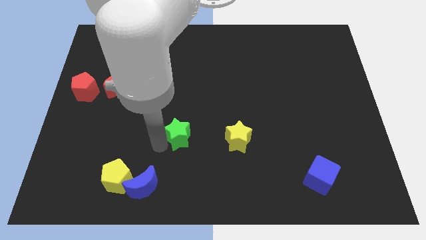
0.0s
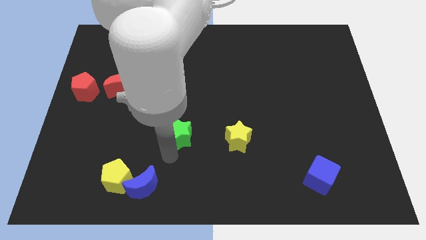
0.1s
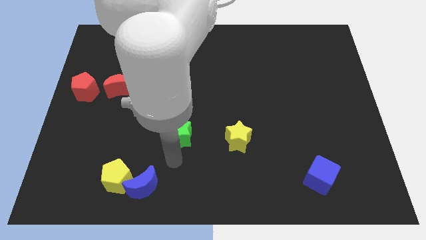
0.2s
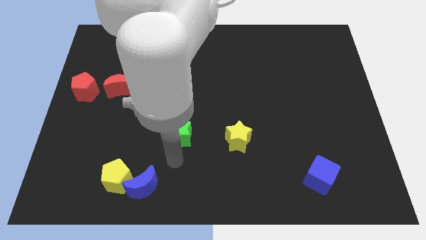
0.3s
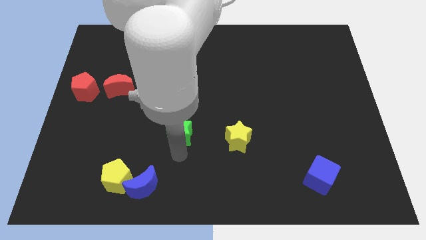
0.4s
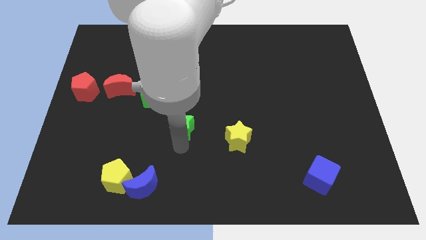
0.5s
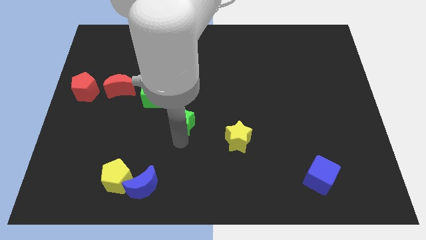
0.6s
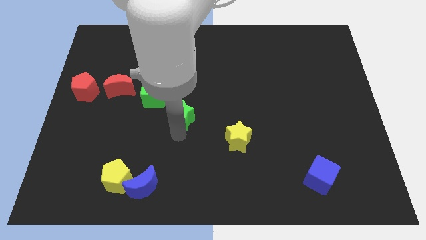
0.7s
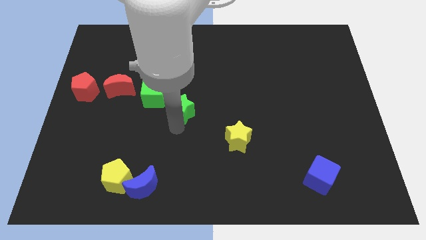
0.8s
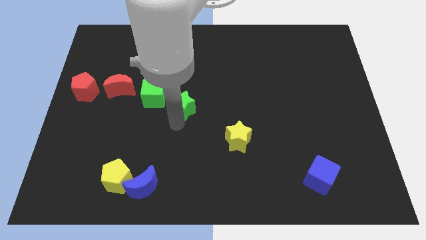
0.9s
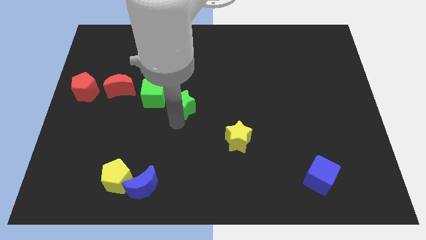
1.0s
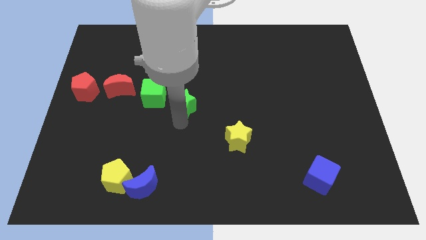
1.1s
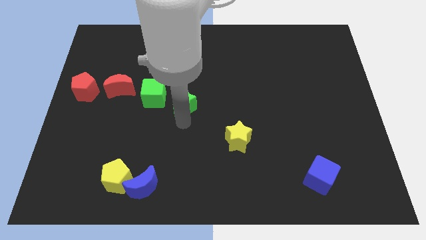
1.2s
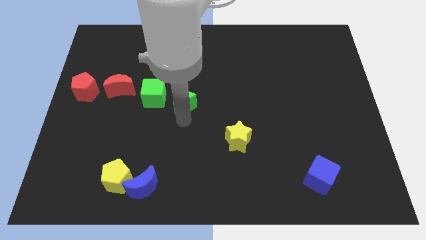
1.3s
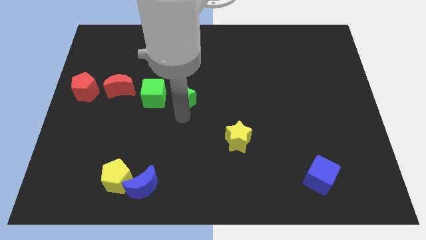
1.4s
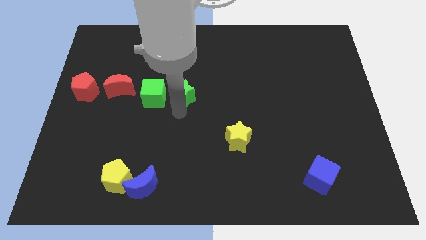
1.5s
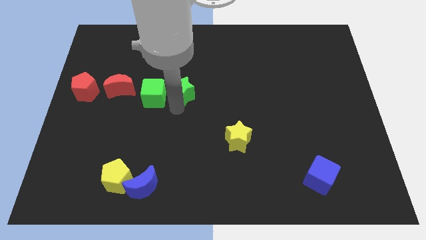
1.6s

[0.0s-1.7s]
move the green star to the right of the green cube

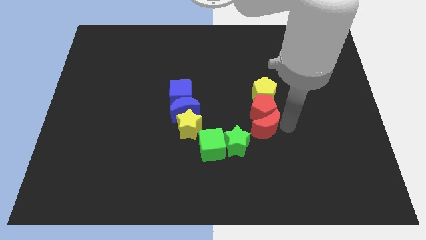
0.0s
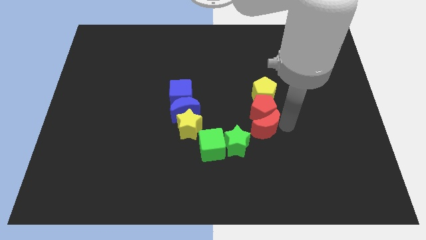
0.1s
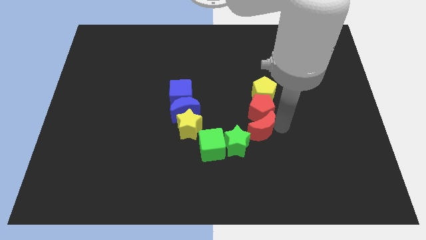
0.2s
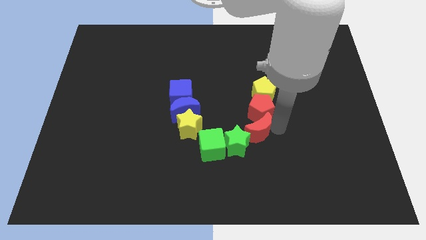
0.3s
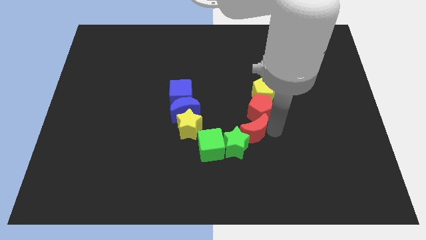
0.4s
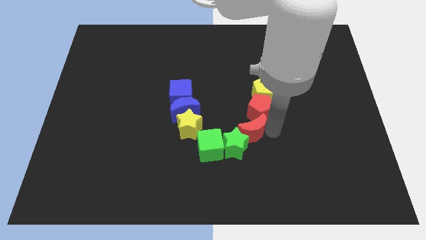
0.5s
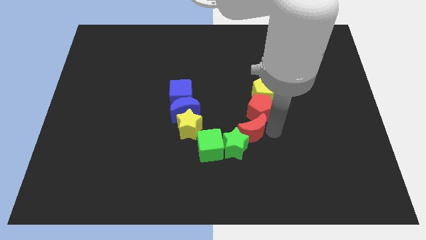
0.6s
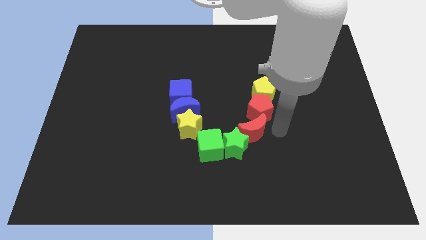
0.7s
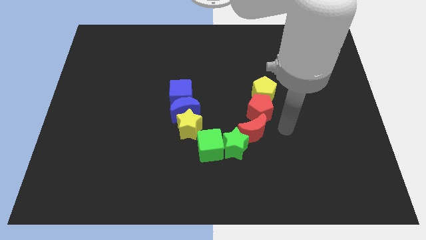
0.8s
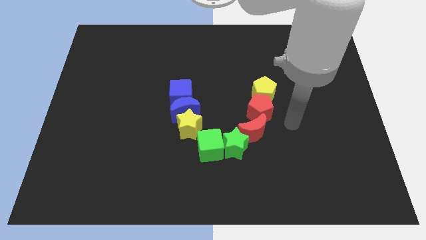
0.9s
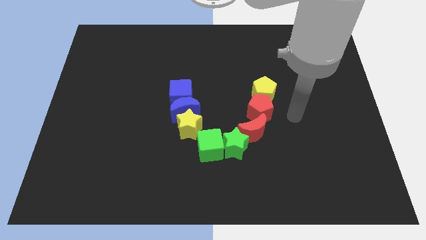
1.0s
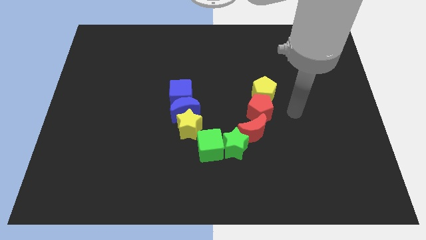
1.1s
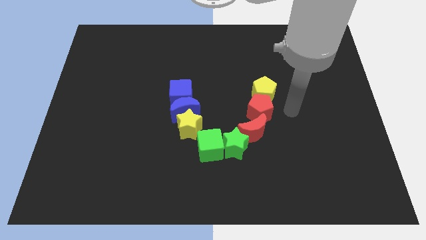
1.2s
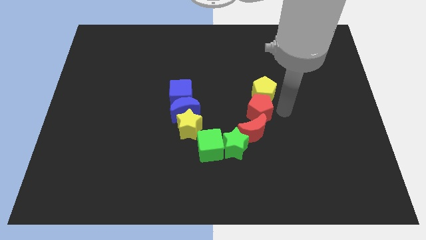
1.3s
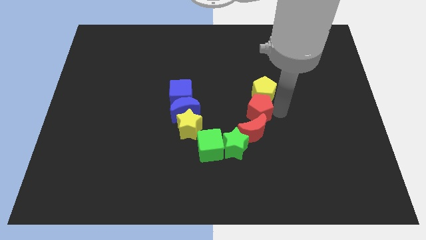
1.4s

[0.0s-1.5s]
push red moon into green star

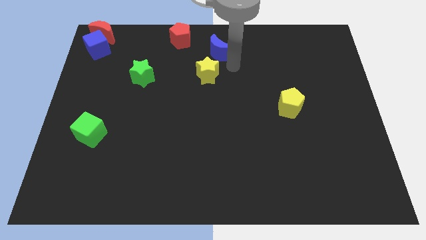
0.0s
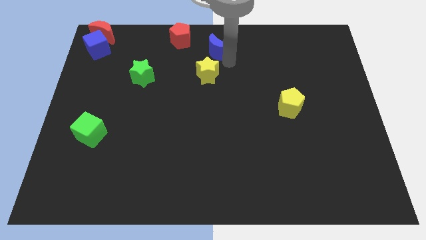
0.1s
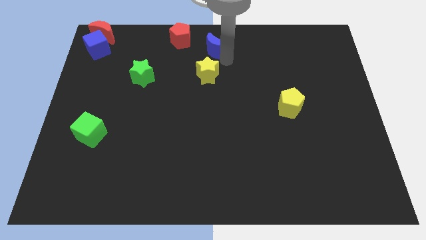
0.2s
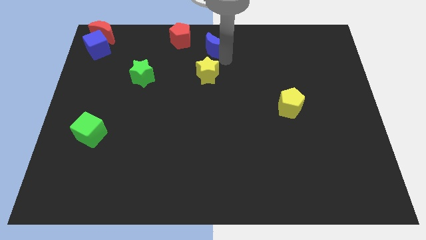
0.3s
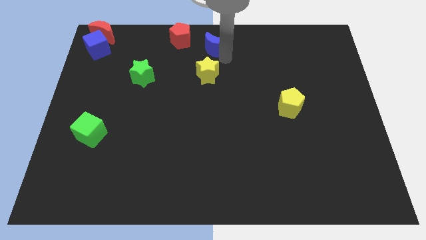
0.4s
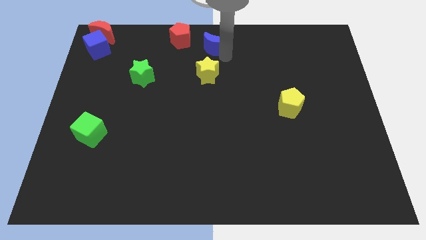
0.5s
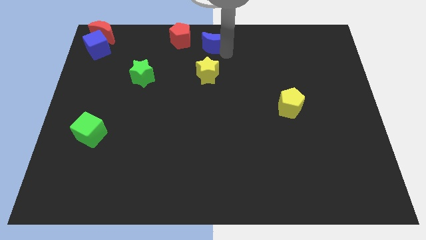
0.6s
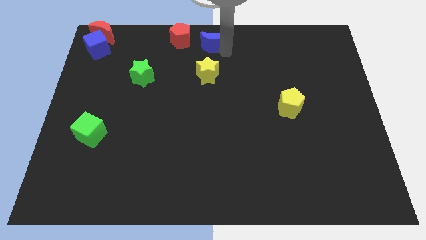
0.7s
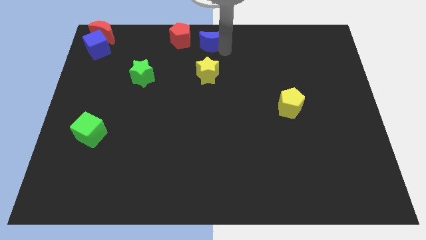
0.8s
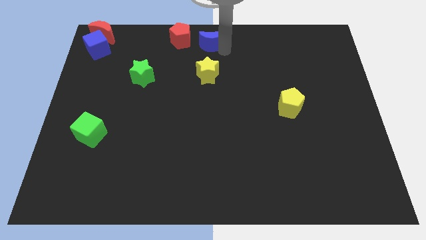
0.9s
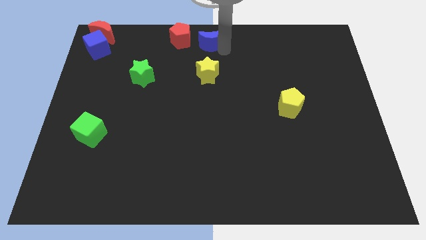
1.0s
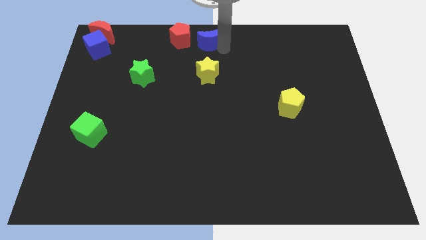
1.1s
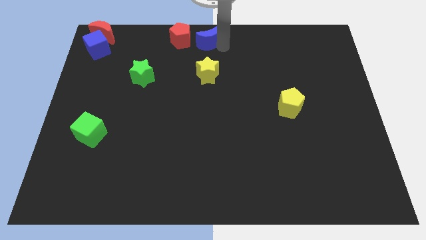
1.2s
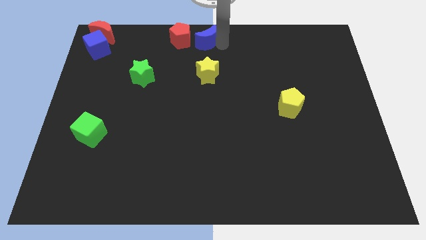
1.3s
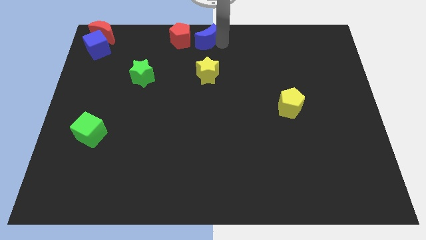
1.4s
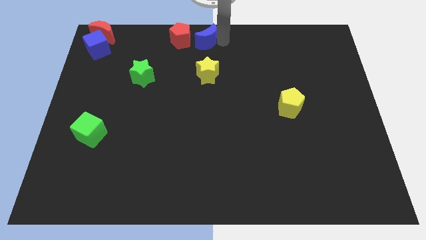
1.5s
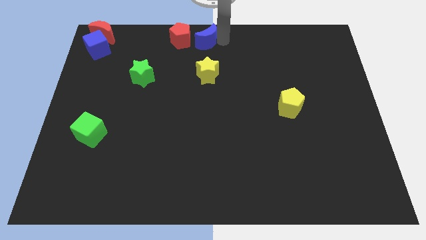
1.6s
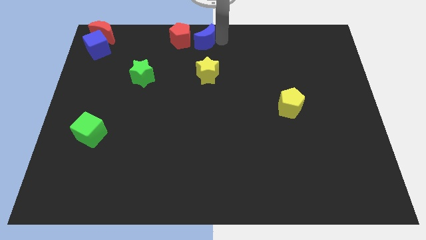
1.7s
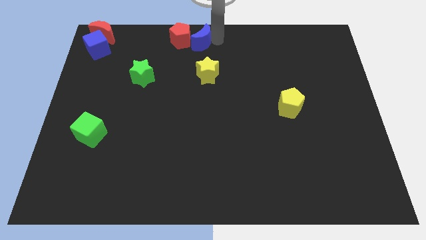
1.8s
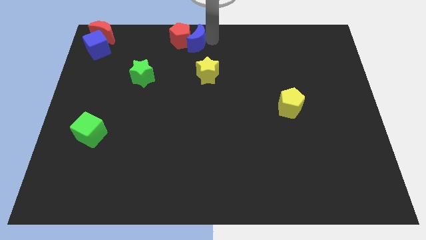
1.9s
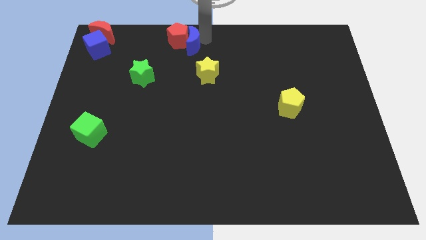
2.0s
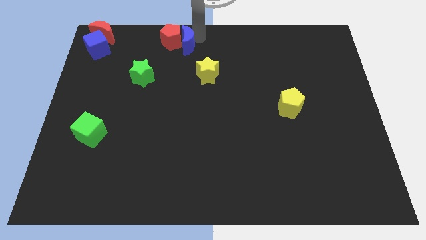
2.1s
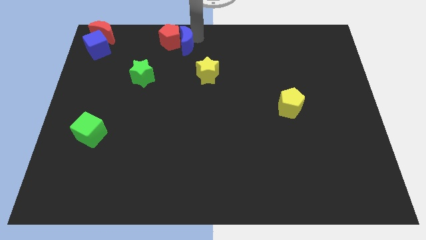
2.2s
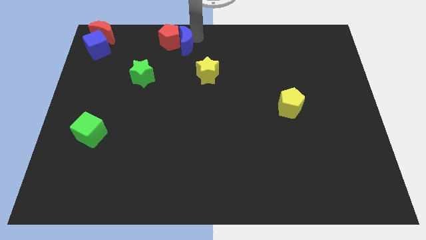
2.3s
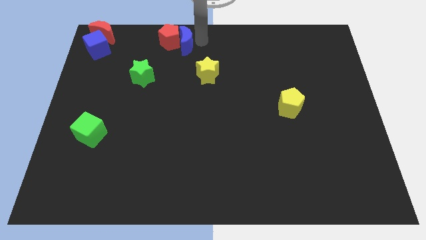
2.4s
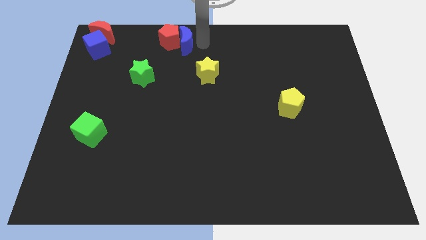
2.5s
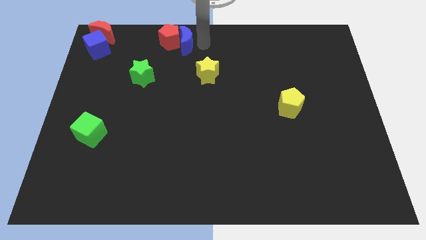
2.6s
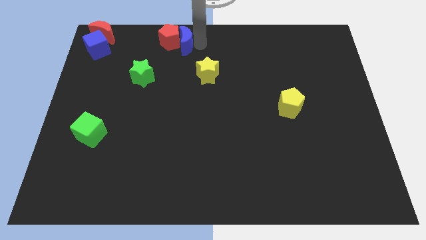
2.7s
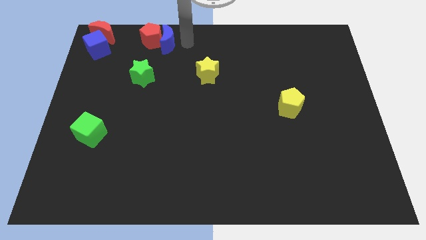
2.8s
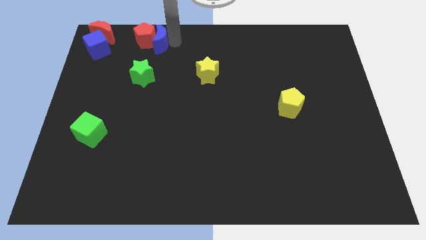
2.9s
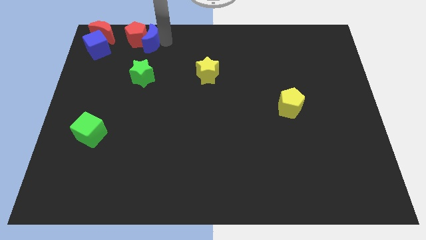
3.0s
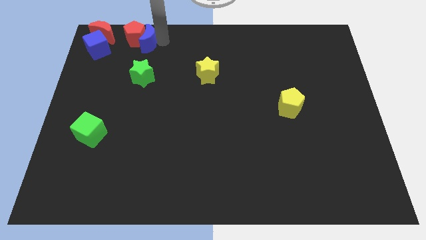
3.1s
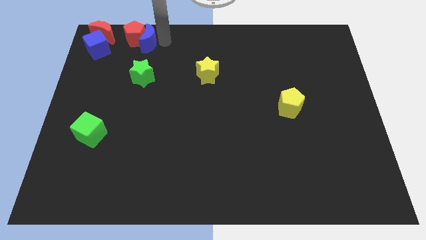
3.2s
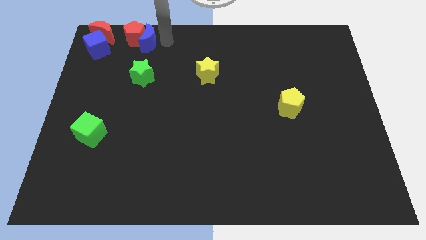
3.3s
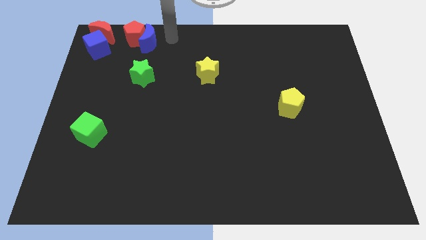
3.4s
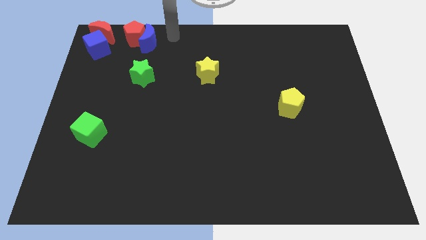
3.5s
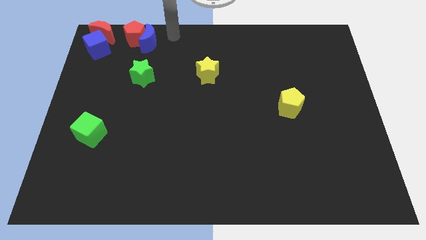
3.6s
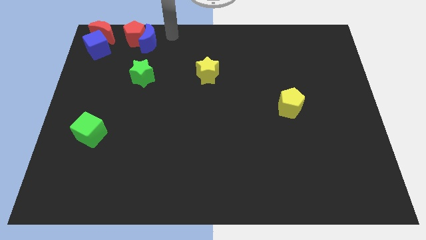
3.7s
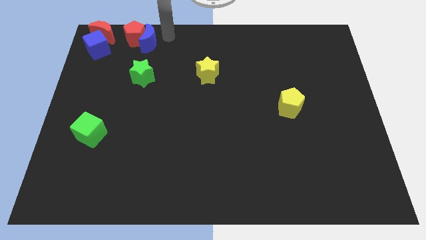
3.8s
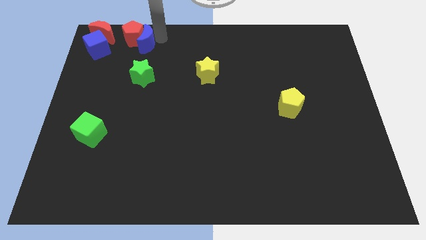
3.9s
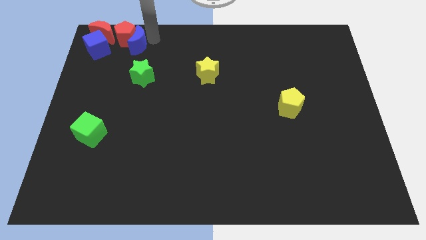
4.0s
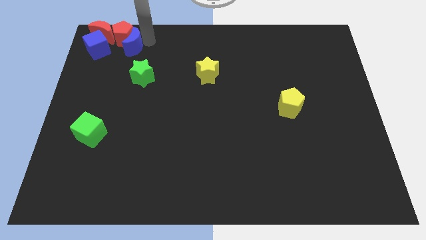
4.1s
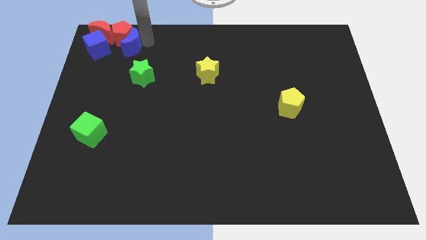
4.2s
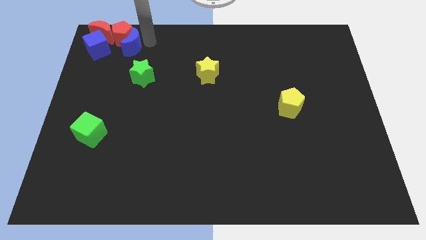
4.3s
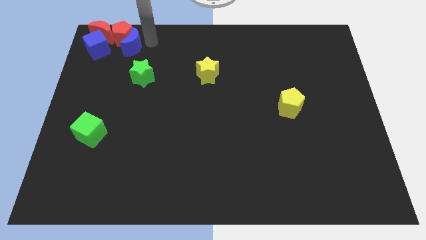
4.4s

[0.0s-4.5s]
push the blue crescent and the red pentagon towards the top left corner of the board

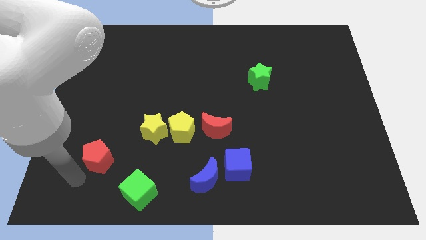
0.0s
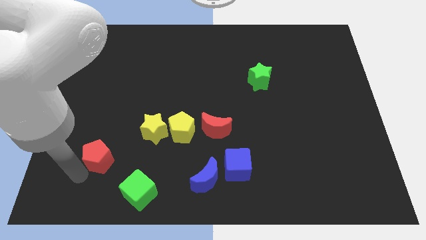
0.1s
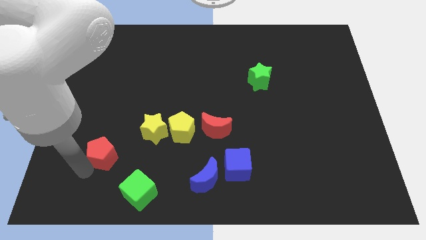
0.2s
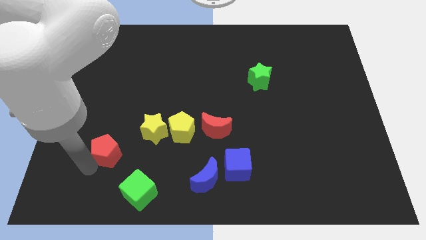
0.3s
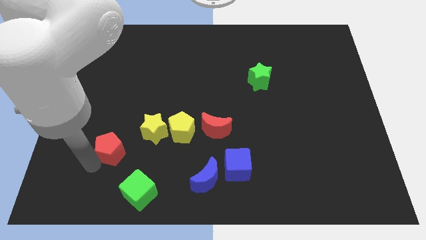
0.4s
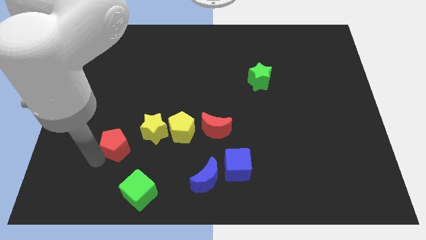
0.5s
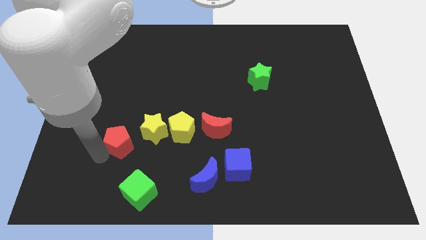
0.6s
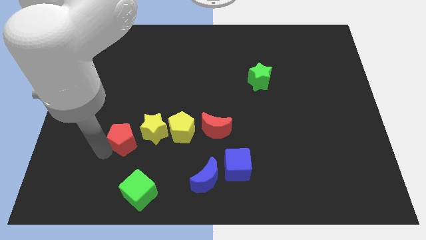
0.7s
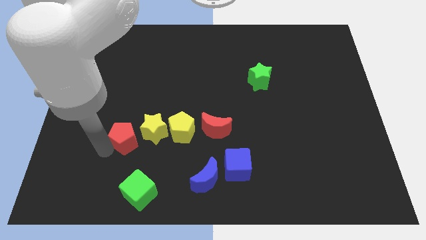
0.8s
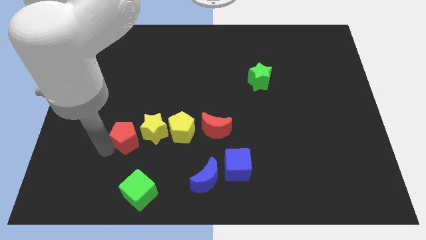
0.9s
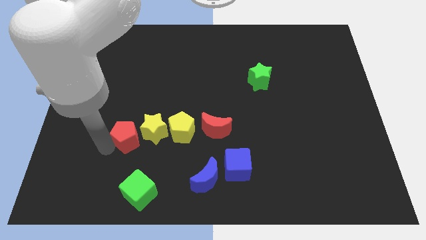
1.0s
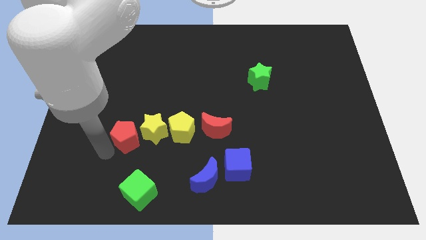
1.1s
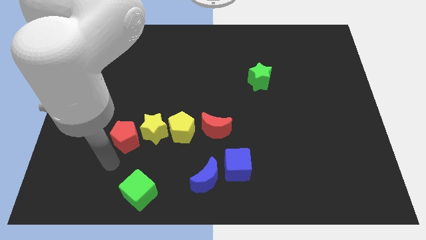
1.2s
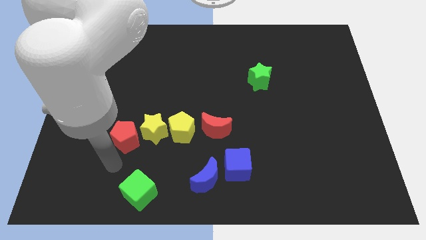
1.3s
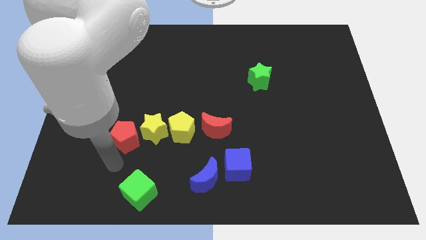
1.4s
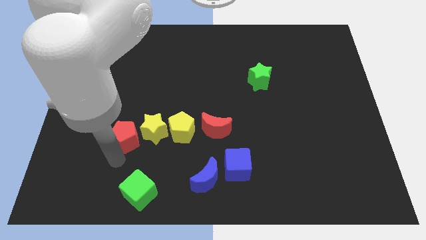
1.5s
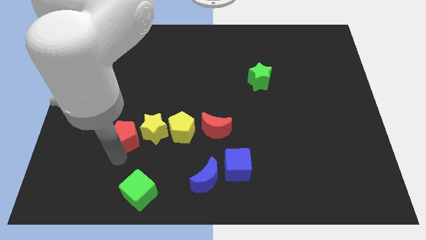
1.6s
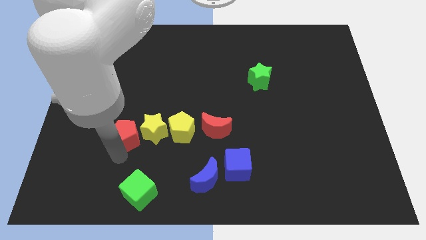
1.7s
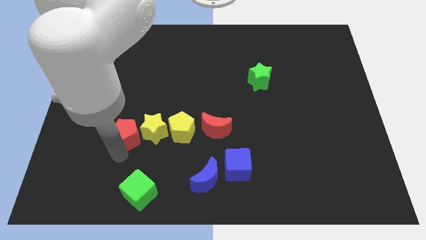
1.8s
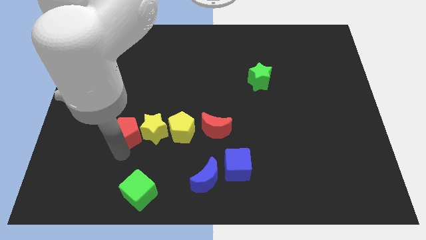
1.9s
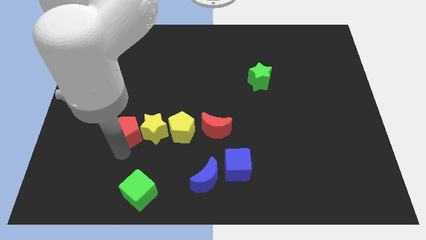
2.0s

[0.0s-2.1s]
place red pentagon to the left of yellow star
